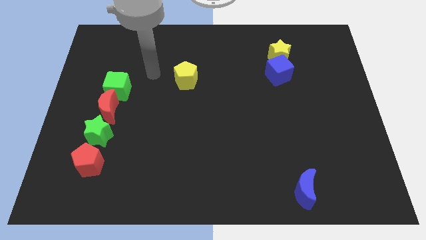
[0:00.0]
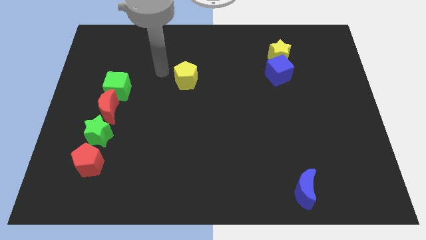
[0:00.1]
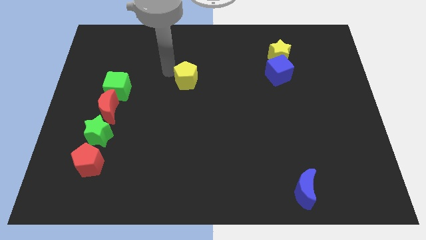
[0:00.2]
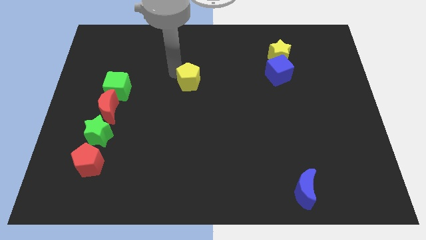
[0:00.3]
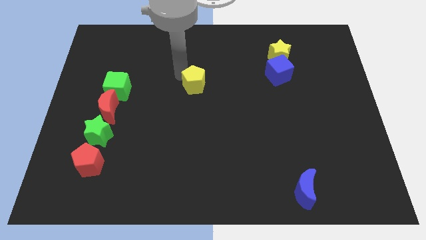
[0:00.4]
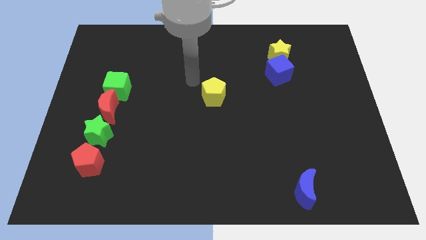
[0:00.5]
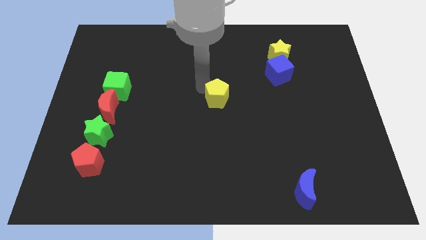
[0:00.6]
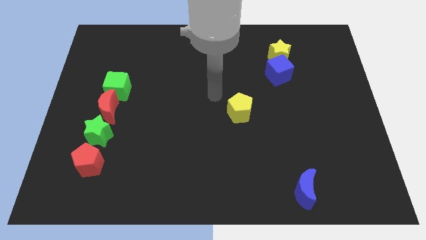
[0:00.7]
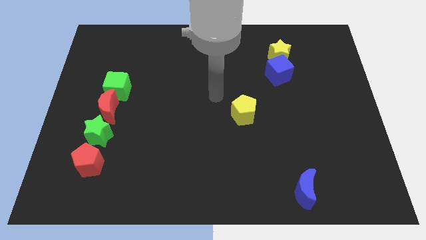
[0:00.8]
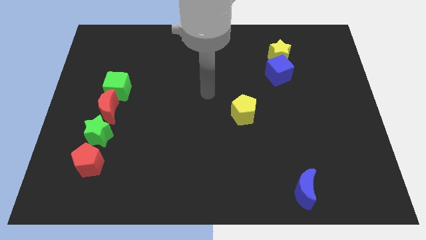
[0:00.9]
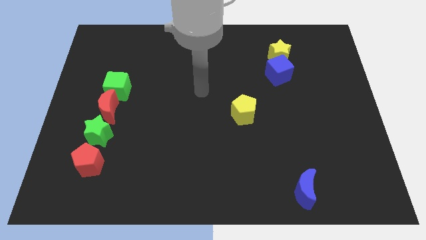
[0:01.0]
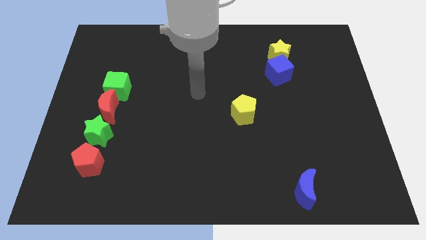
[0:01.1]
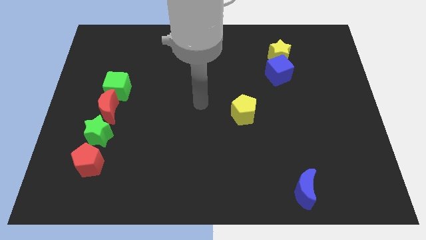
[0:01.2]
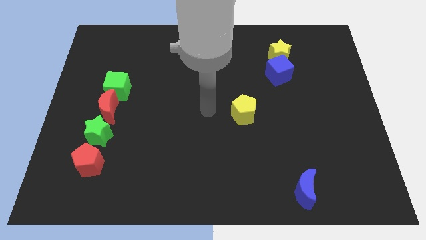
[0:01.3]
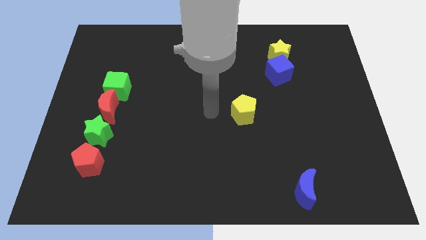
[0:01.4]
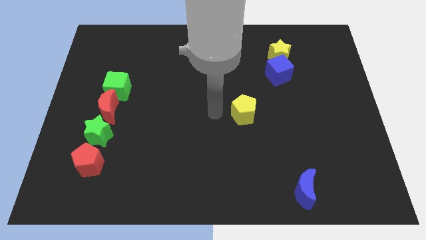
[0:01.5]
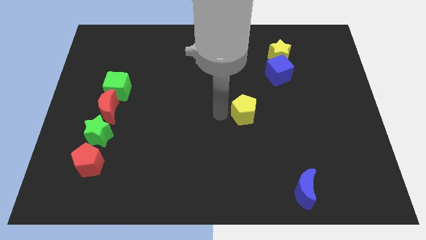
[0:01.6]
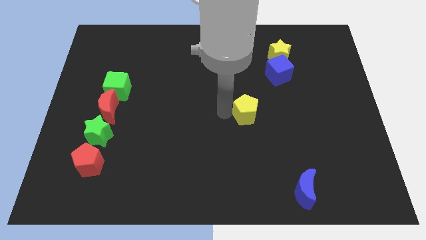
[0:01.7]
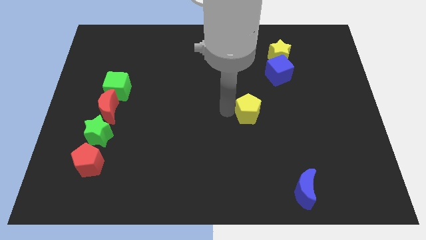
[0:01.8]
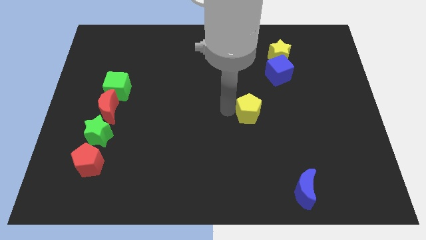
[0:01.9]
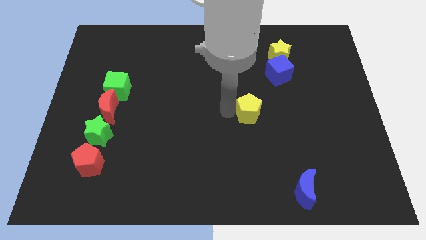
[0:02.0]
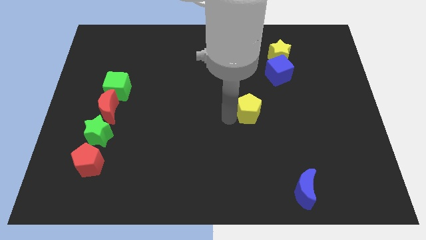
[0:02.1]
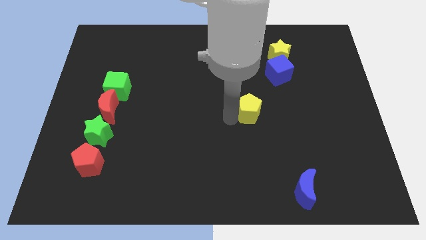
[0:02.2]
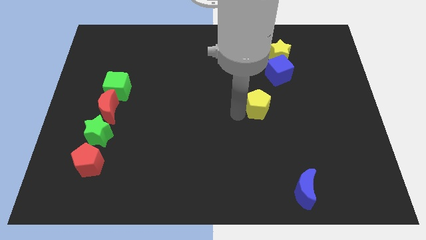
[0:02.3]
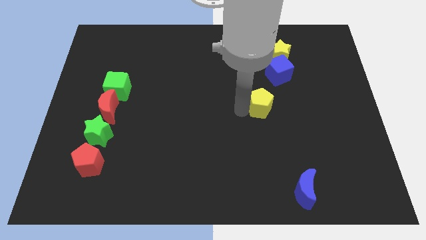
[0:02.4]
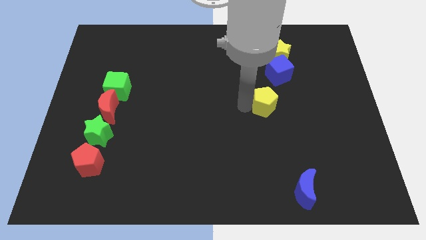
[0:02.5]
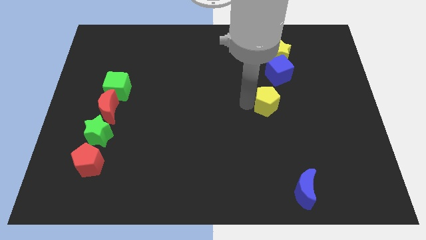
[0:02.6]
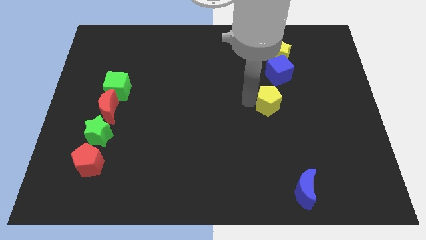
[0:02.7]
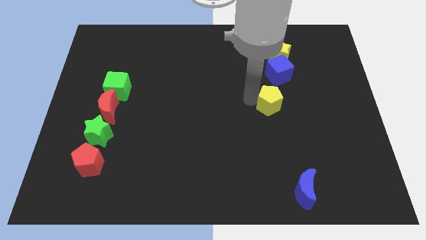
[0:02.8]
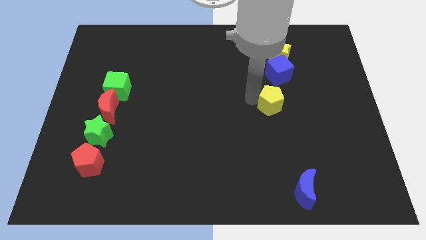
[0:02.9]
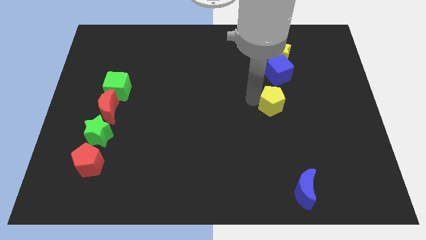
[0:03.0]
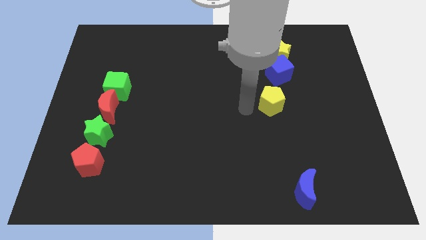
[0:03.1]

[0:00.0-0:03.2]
move the yellow pentagon to the bottom left of the blue cube

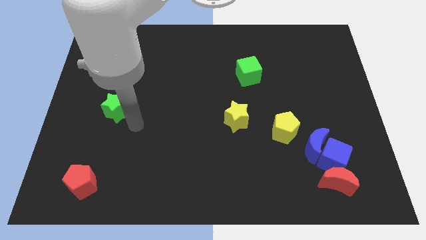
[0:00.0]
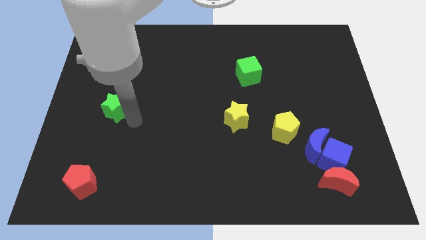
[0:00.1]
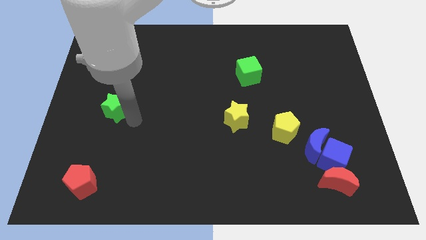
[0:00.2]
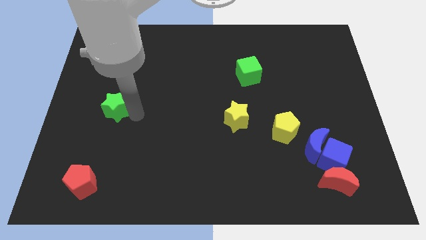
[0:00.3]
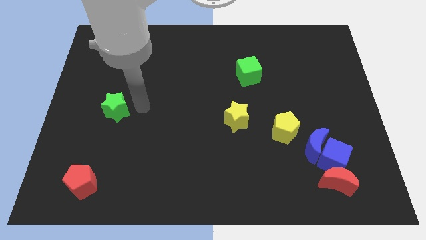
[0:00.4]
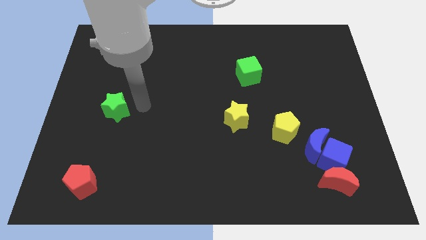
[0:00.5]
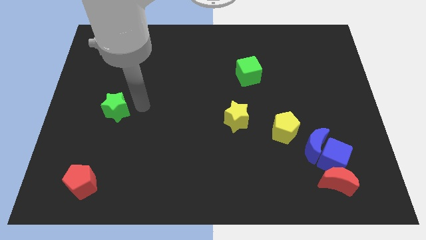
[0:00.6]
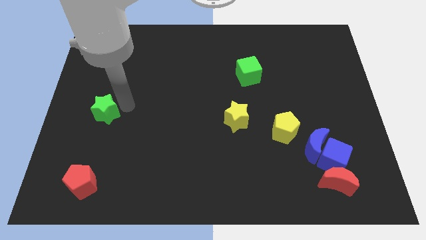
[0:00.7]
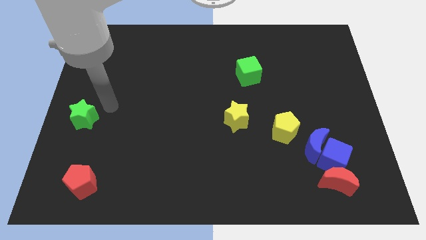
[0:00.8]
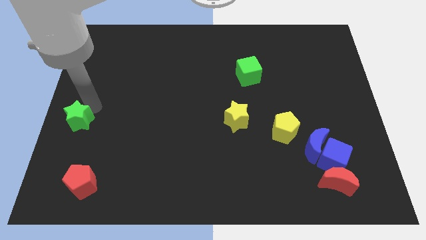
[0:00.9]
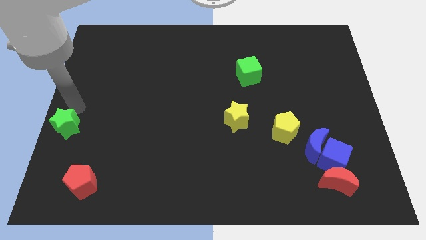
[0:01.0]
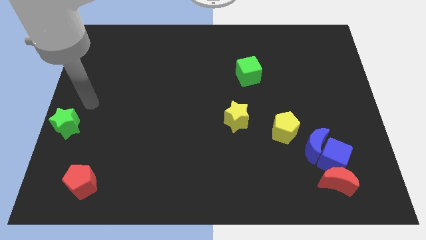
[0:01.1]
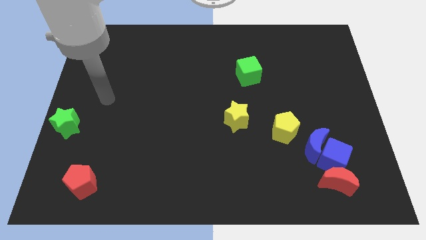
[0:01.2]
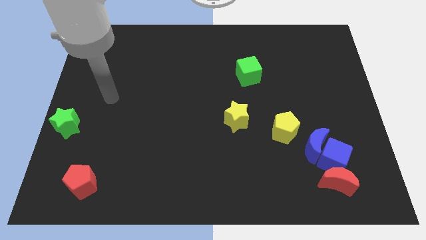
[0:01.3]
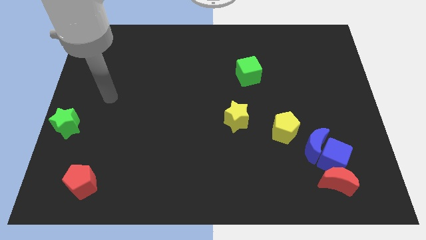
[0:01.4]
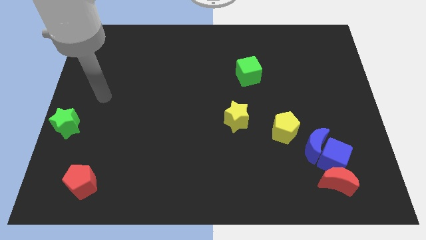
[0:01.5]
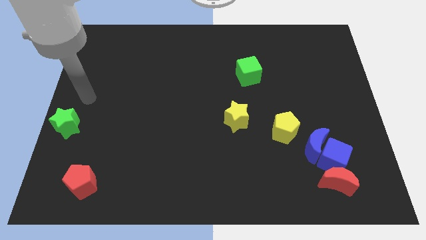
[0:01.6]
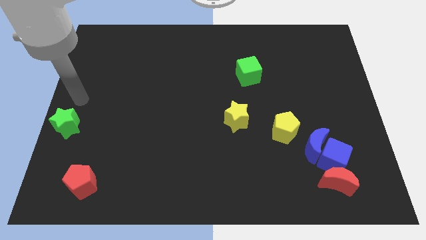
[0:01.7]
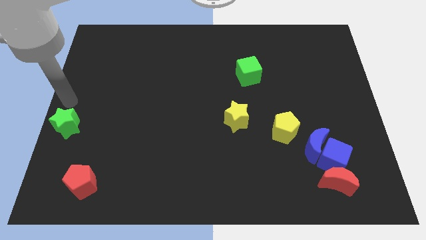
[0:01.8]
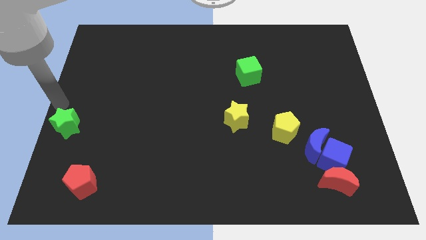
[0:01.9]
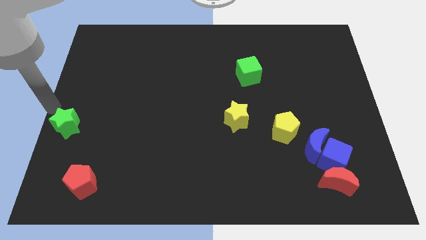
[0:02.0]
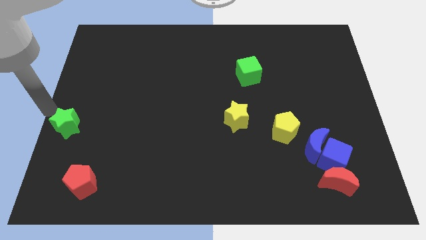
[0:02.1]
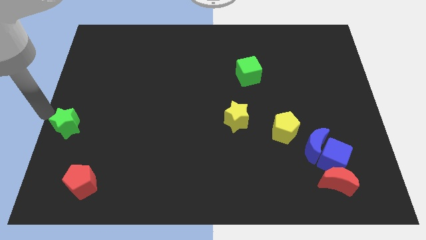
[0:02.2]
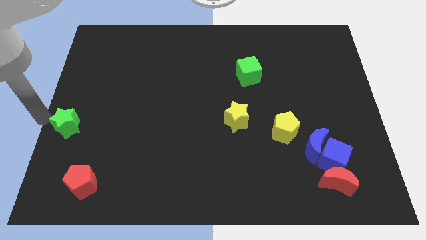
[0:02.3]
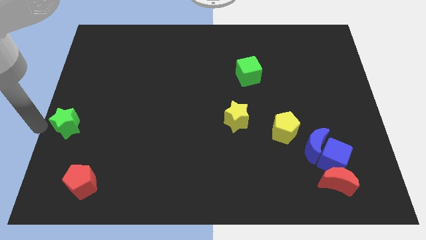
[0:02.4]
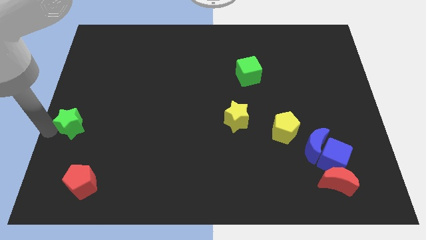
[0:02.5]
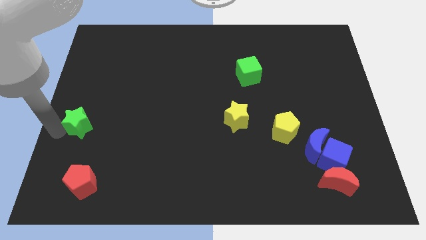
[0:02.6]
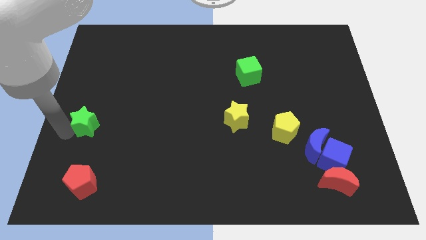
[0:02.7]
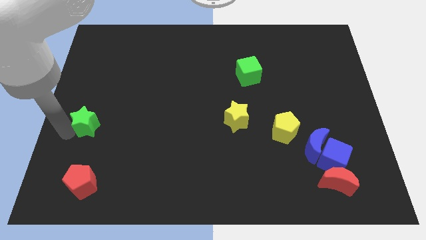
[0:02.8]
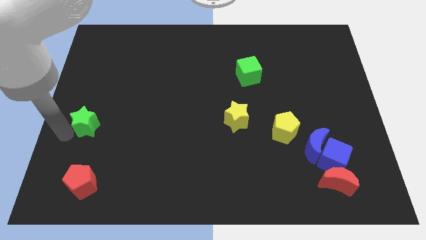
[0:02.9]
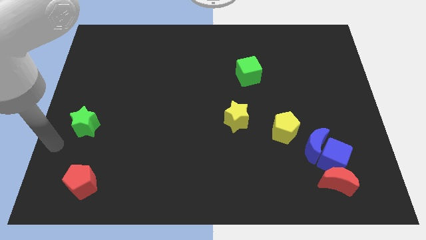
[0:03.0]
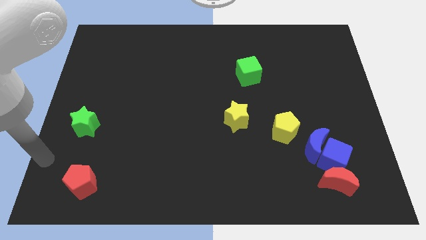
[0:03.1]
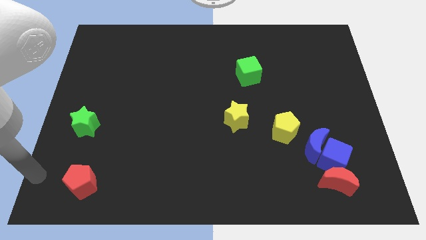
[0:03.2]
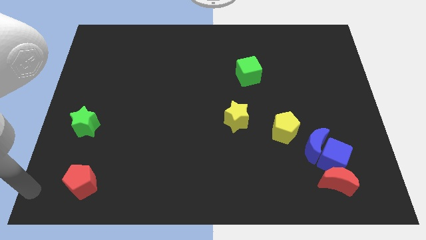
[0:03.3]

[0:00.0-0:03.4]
place green star to the top of red pentagon

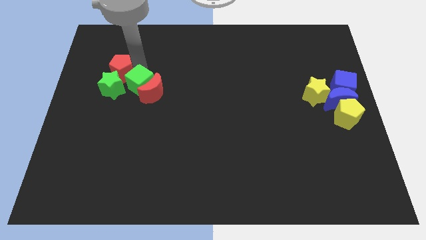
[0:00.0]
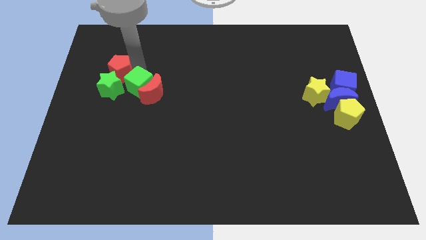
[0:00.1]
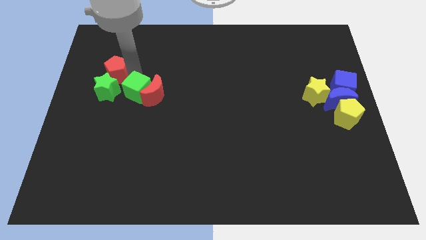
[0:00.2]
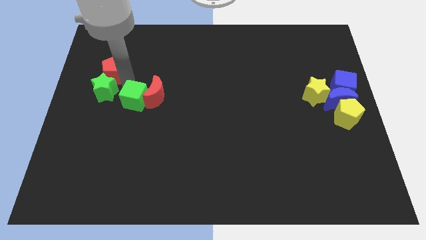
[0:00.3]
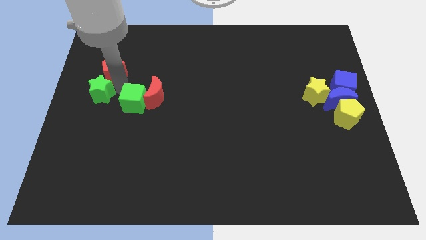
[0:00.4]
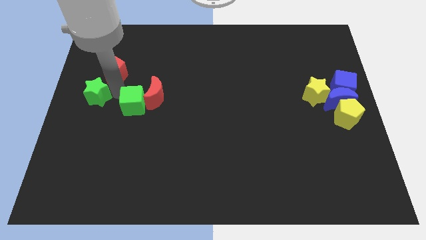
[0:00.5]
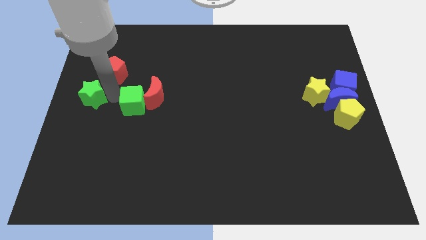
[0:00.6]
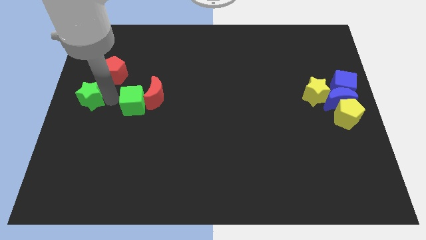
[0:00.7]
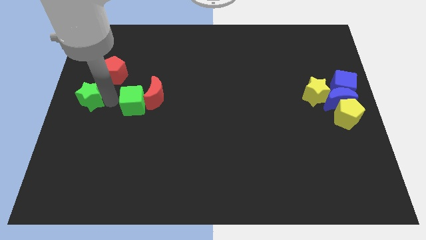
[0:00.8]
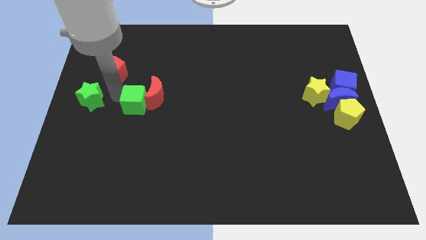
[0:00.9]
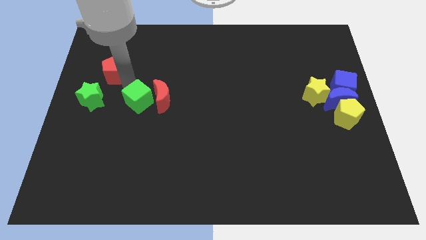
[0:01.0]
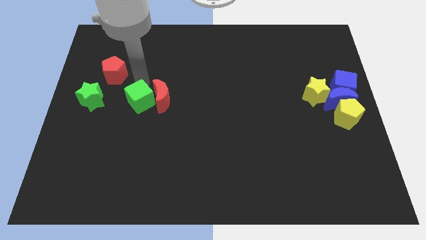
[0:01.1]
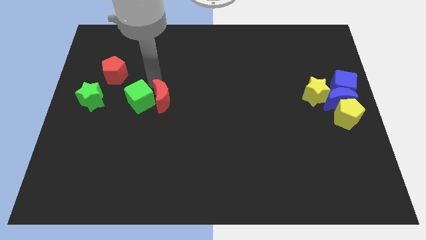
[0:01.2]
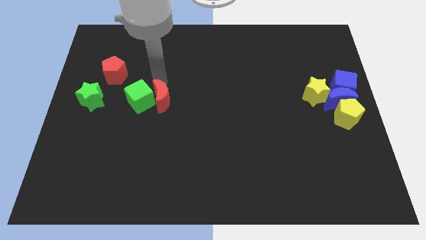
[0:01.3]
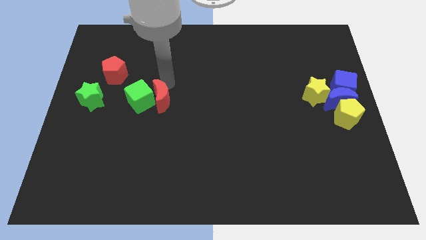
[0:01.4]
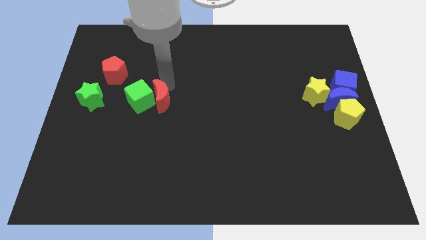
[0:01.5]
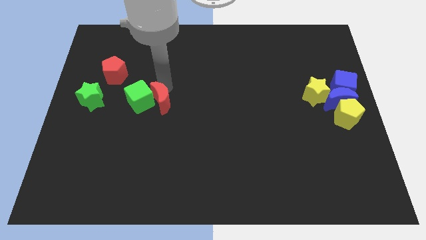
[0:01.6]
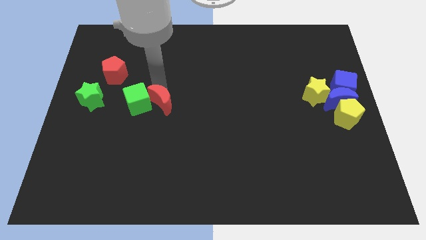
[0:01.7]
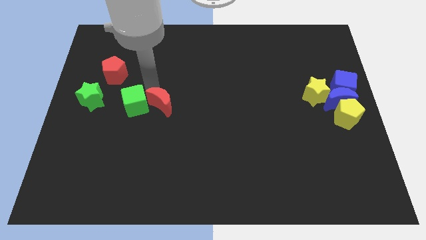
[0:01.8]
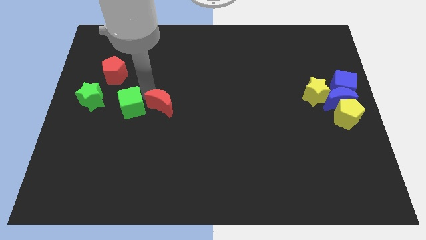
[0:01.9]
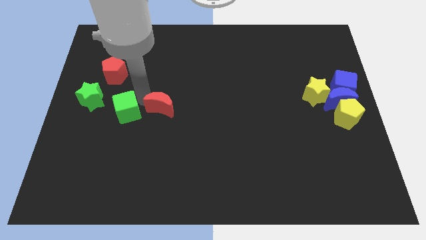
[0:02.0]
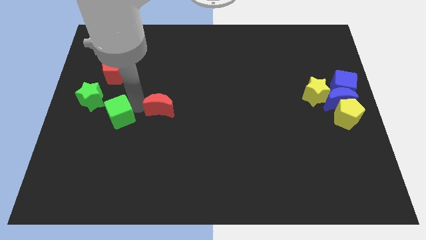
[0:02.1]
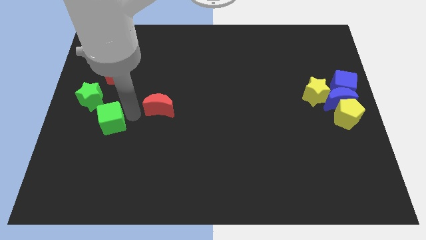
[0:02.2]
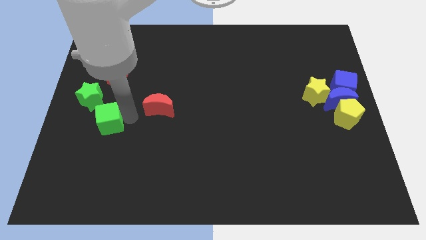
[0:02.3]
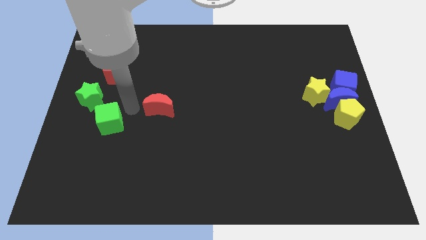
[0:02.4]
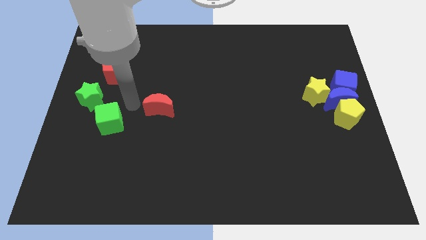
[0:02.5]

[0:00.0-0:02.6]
push green cube below red pentagon
